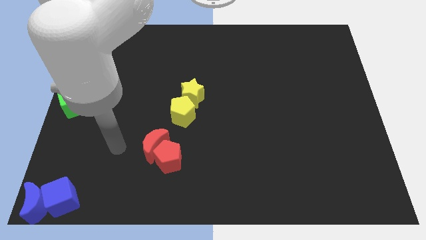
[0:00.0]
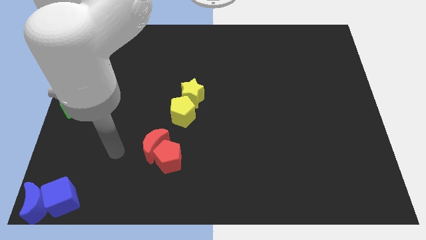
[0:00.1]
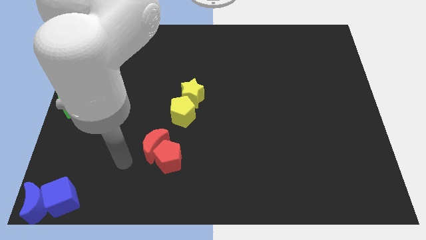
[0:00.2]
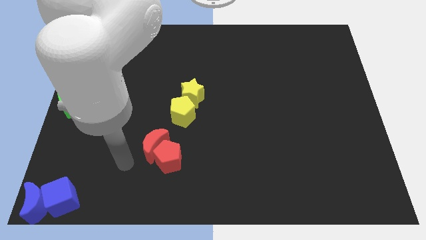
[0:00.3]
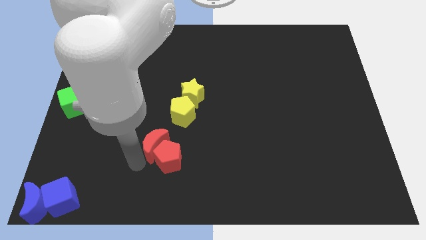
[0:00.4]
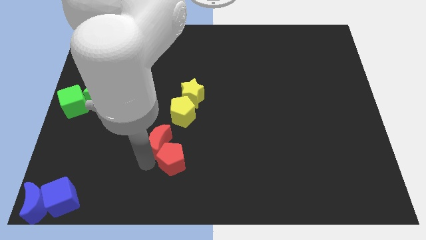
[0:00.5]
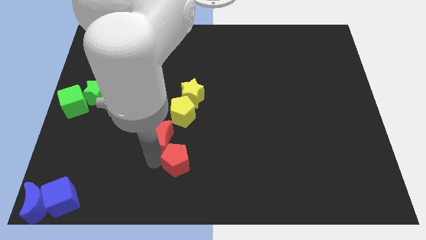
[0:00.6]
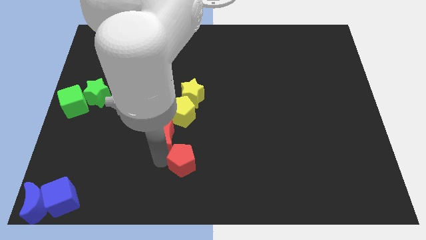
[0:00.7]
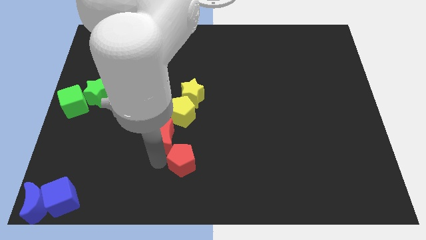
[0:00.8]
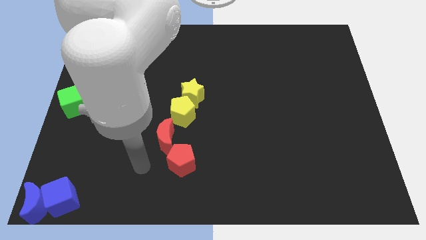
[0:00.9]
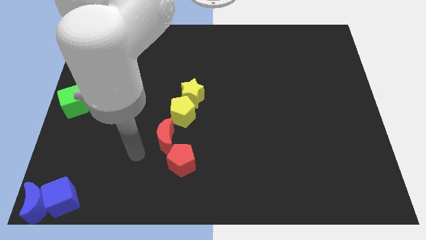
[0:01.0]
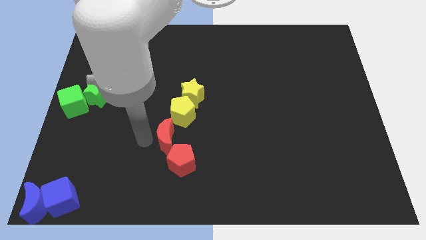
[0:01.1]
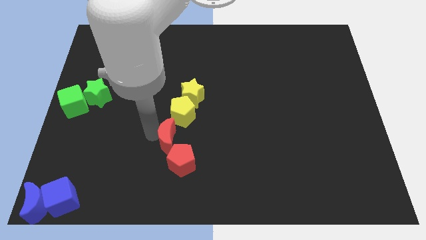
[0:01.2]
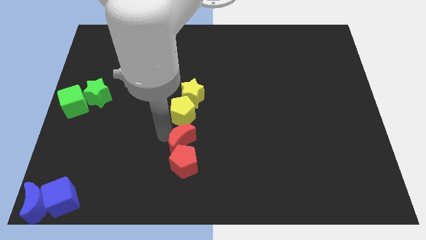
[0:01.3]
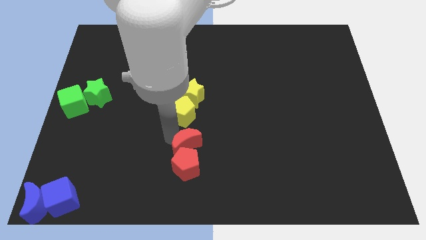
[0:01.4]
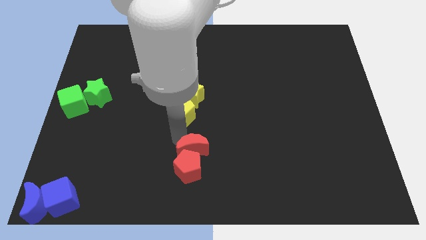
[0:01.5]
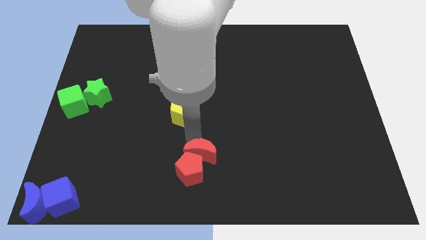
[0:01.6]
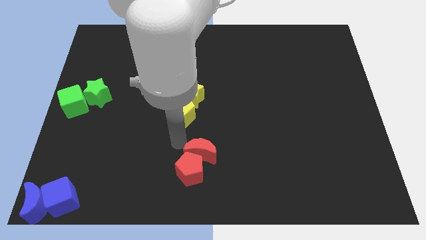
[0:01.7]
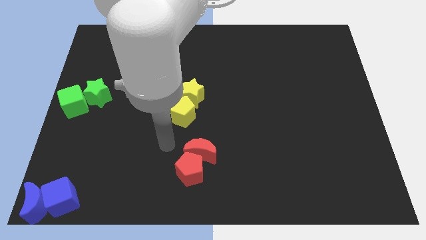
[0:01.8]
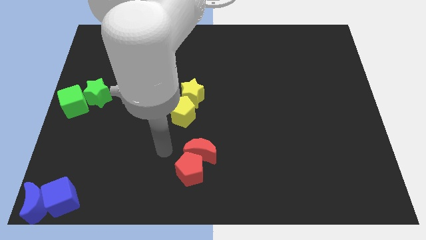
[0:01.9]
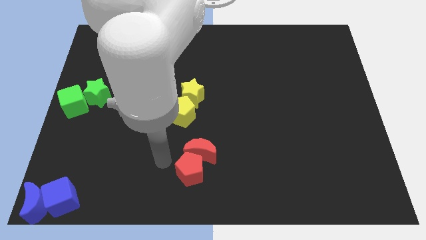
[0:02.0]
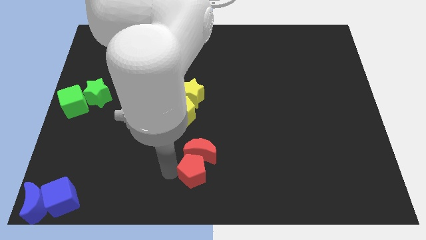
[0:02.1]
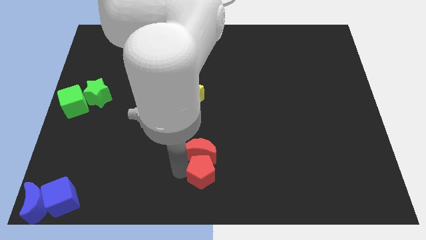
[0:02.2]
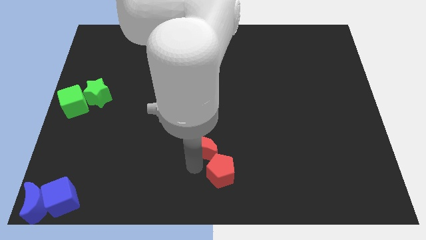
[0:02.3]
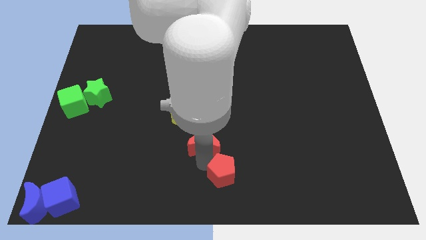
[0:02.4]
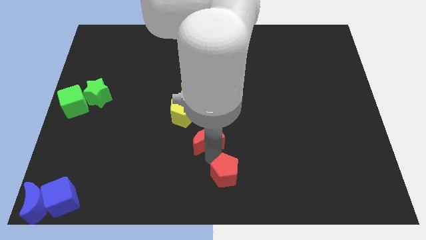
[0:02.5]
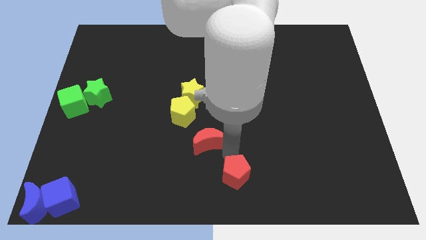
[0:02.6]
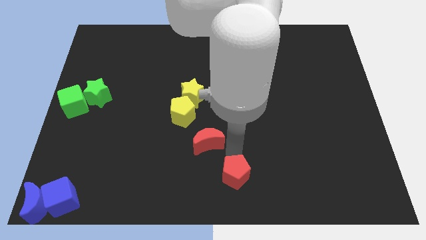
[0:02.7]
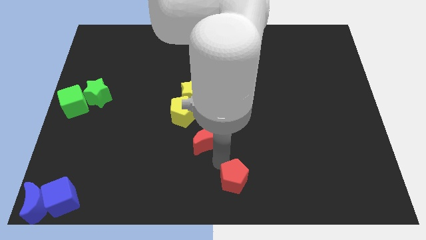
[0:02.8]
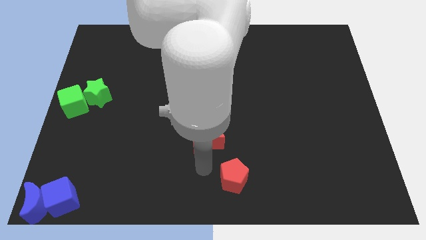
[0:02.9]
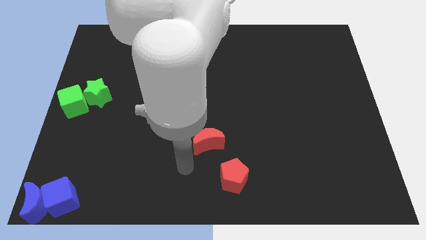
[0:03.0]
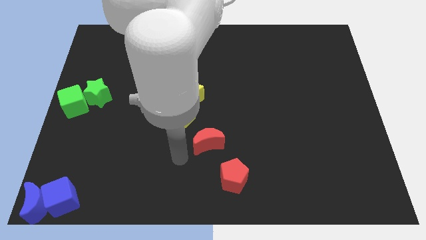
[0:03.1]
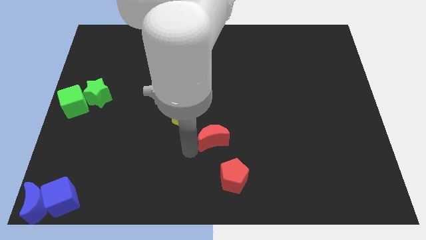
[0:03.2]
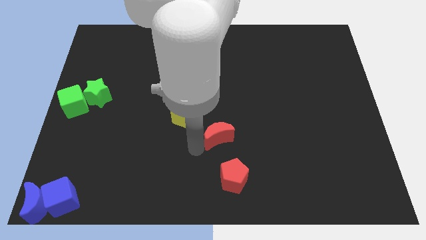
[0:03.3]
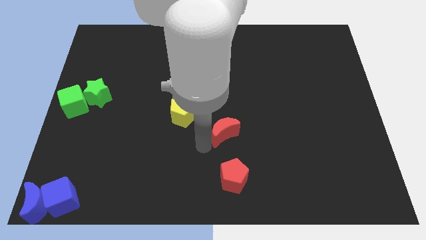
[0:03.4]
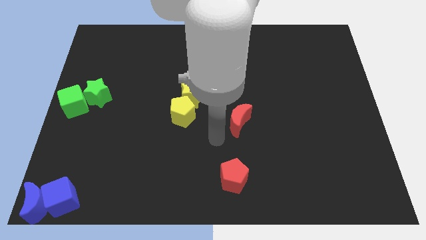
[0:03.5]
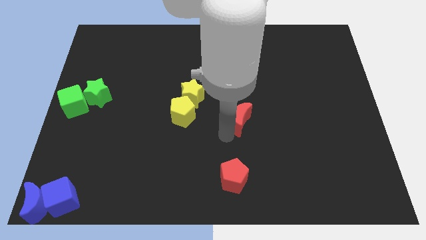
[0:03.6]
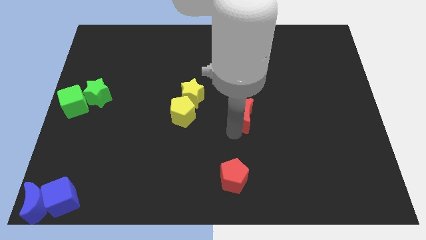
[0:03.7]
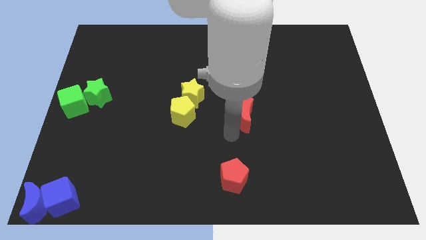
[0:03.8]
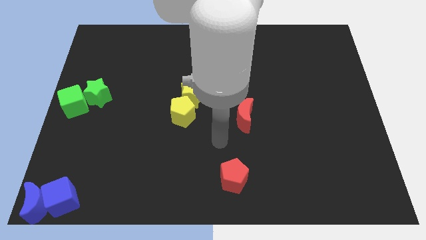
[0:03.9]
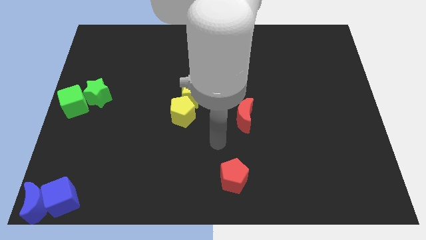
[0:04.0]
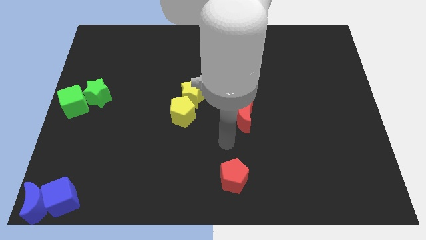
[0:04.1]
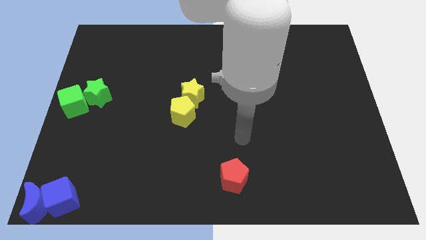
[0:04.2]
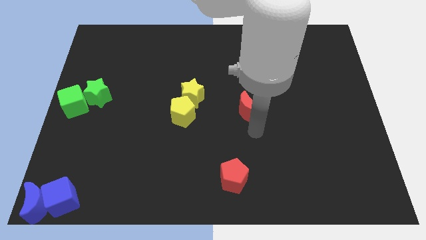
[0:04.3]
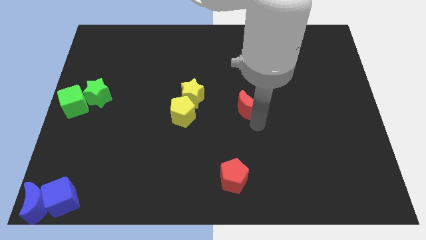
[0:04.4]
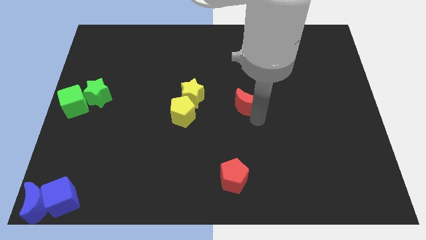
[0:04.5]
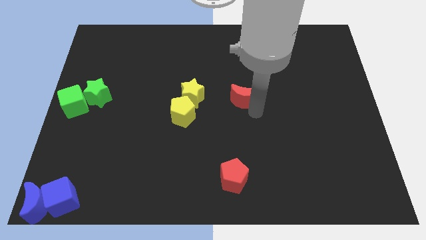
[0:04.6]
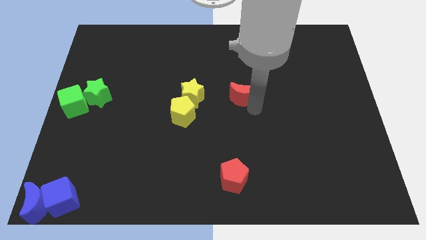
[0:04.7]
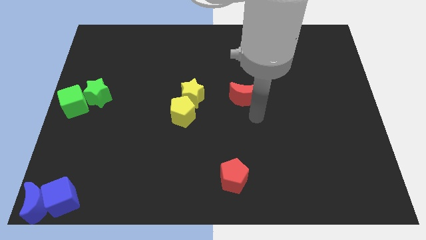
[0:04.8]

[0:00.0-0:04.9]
separate the red pentagon and red moon

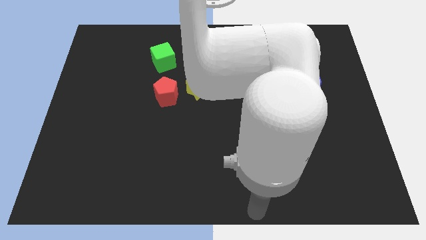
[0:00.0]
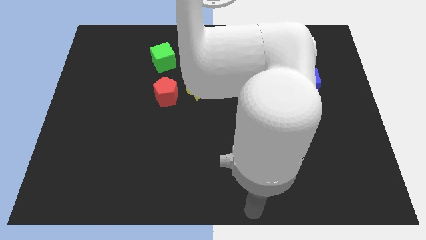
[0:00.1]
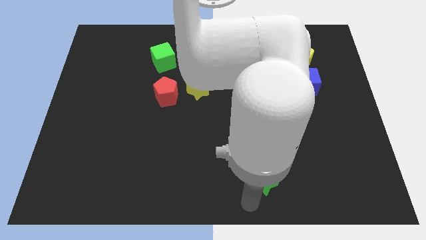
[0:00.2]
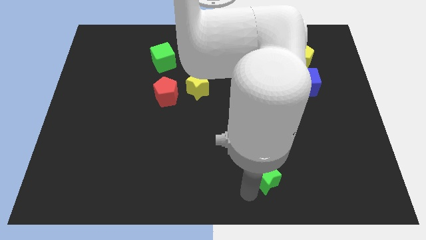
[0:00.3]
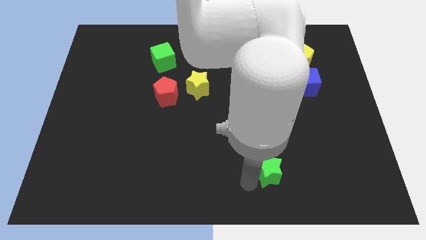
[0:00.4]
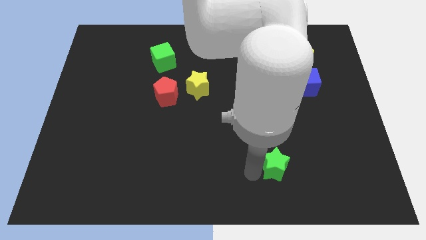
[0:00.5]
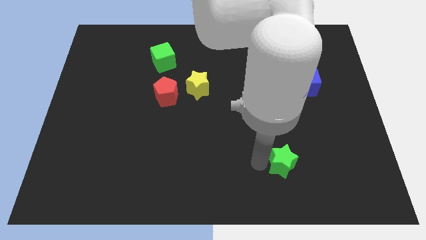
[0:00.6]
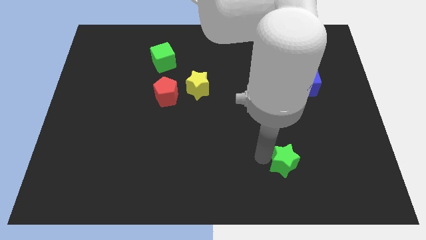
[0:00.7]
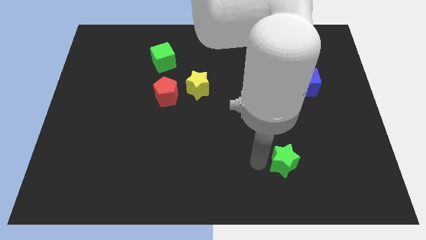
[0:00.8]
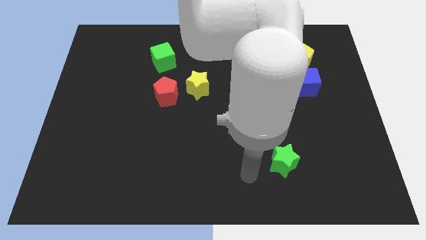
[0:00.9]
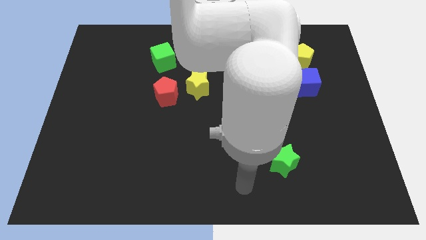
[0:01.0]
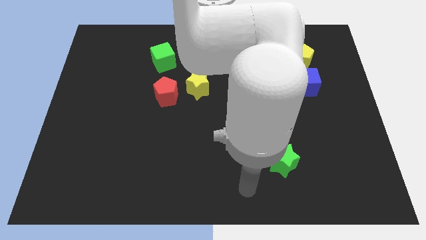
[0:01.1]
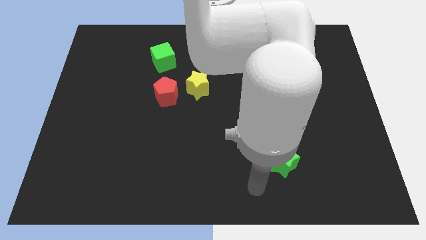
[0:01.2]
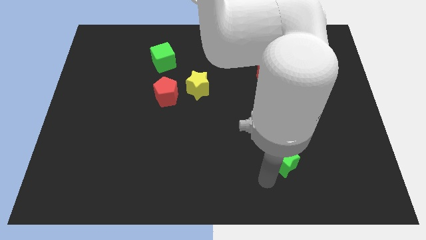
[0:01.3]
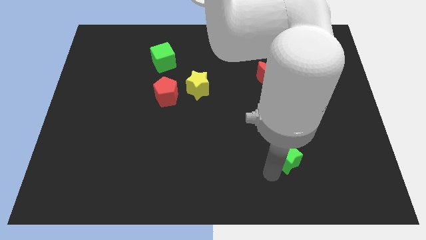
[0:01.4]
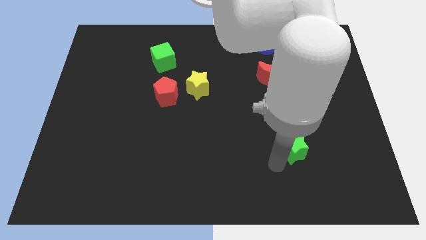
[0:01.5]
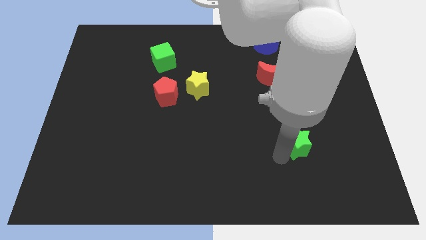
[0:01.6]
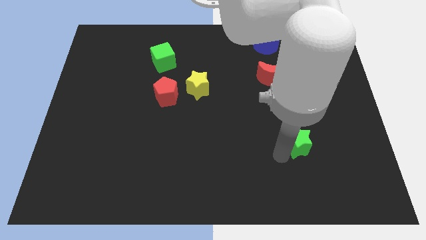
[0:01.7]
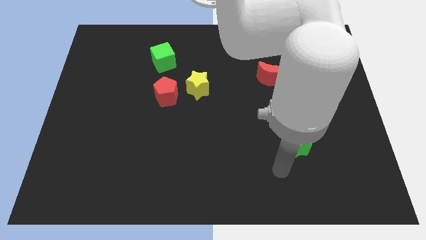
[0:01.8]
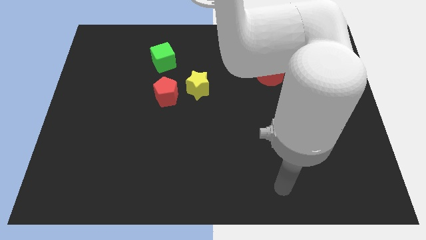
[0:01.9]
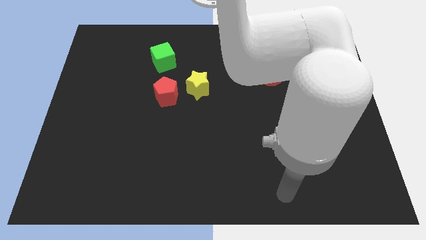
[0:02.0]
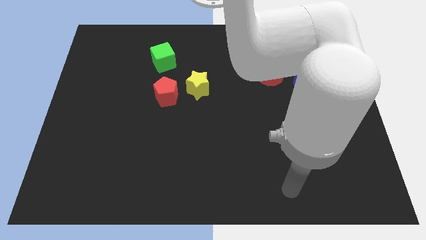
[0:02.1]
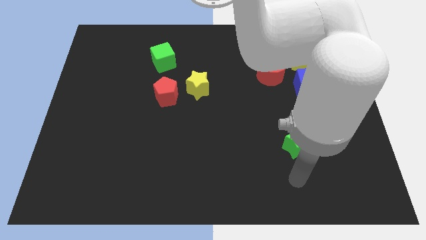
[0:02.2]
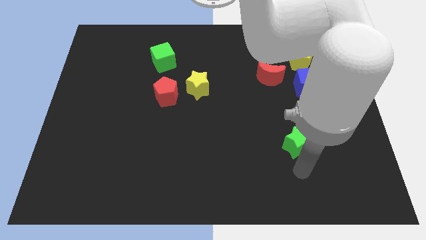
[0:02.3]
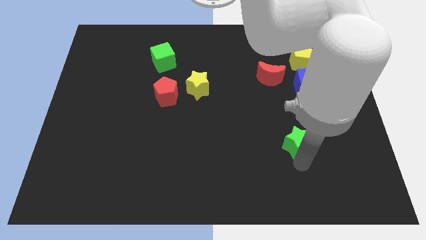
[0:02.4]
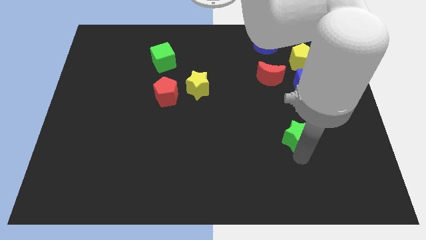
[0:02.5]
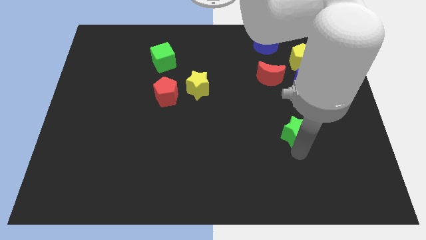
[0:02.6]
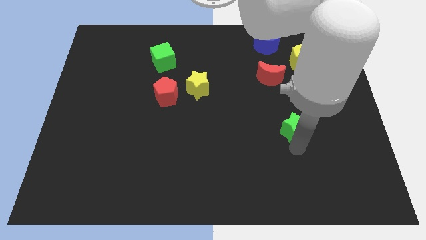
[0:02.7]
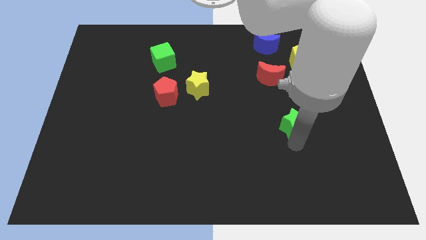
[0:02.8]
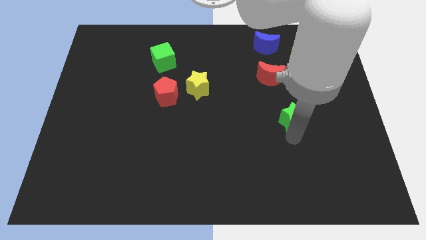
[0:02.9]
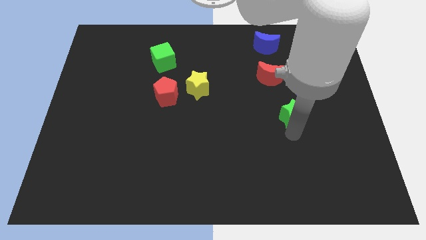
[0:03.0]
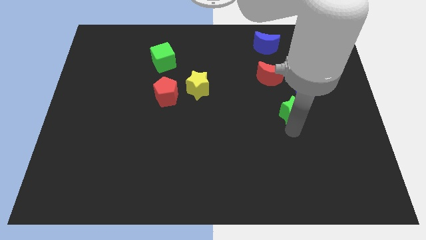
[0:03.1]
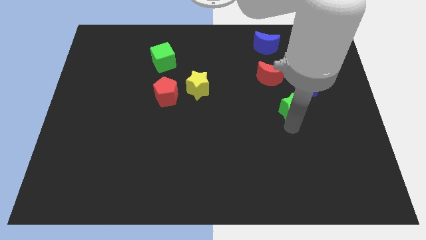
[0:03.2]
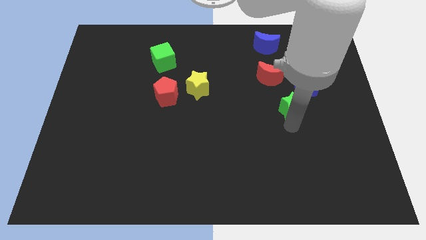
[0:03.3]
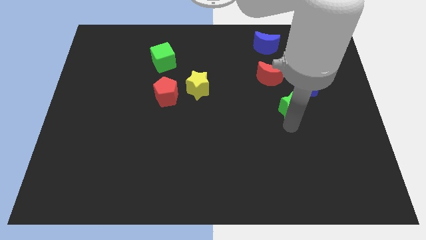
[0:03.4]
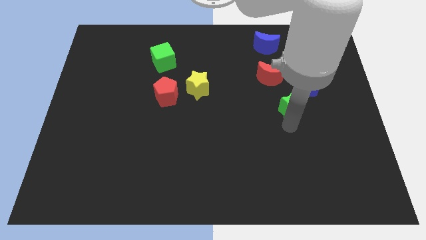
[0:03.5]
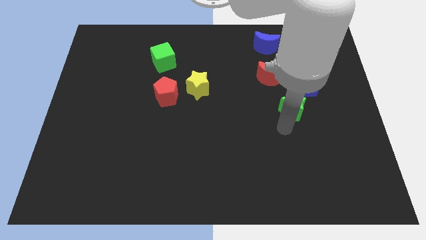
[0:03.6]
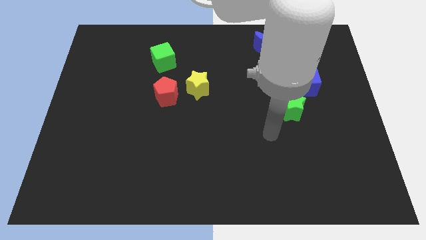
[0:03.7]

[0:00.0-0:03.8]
put the green star diagonal to the yellow star

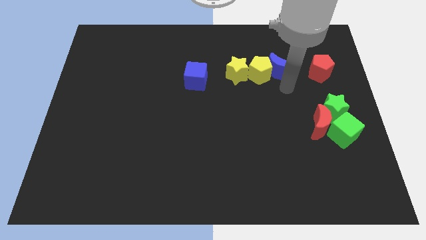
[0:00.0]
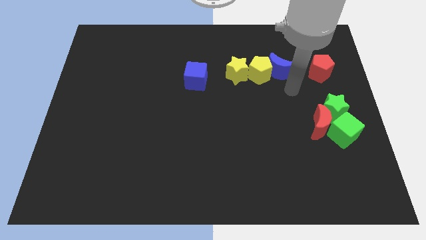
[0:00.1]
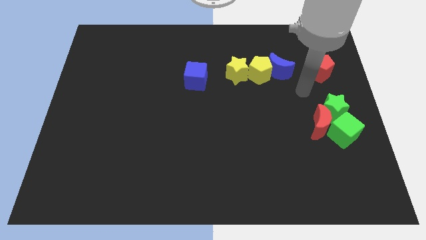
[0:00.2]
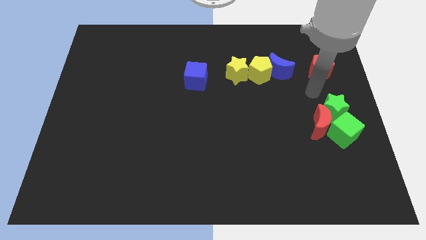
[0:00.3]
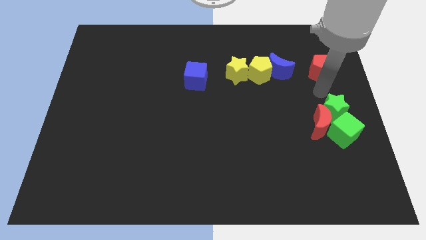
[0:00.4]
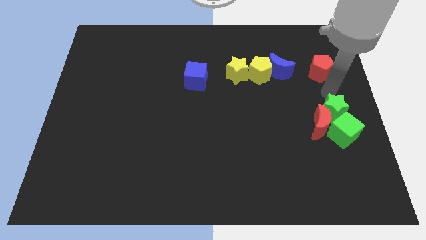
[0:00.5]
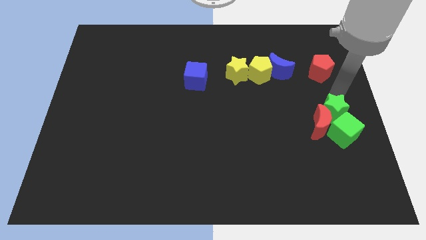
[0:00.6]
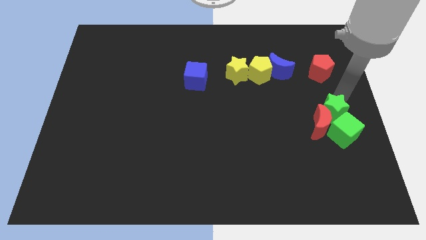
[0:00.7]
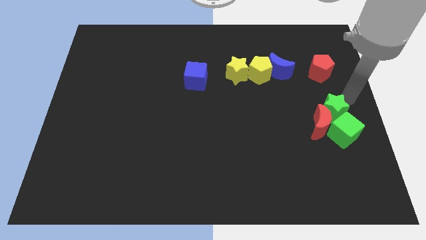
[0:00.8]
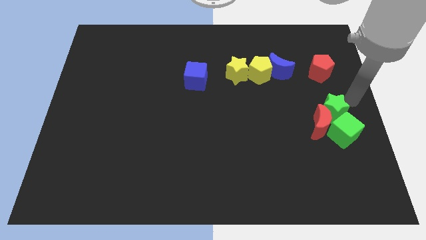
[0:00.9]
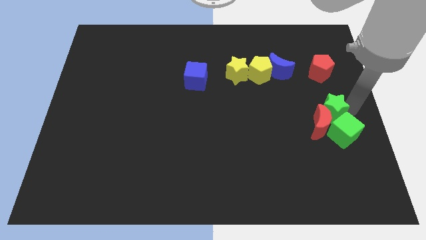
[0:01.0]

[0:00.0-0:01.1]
move your hand towards the green star
